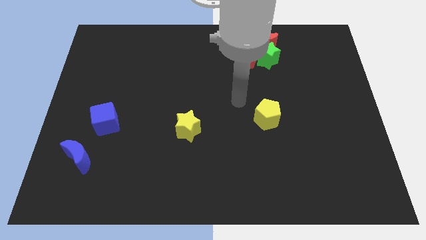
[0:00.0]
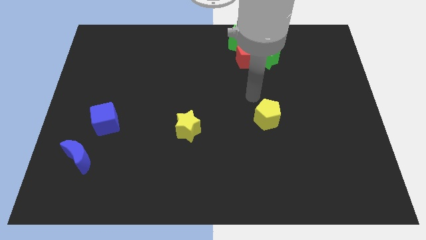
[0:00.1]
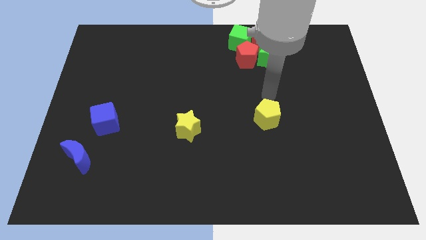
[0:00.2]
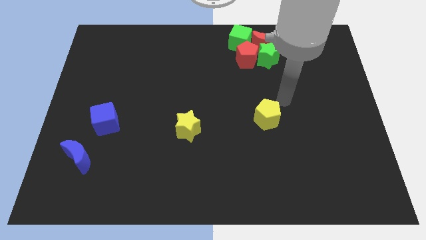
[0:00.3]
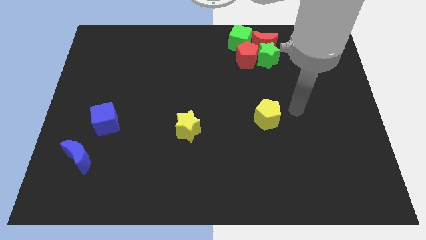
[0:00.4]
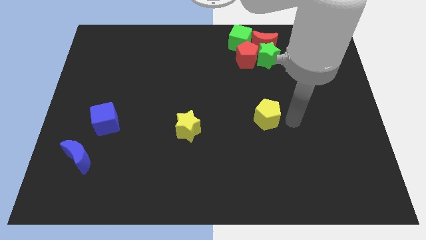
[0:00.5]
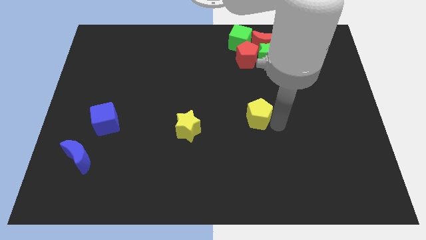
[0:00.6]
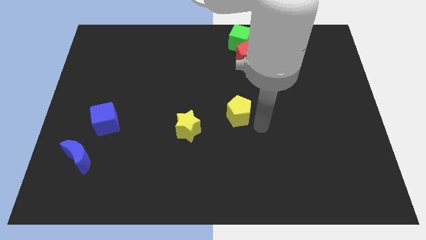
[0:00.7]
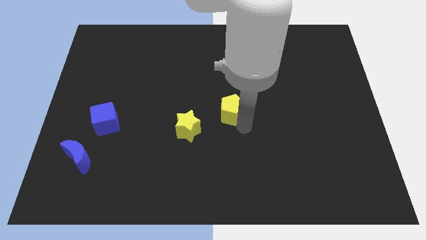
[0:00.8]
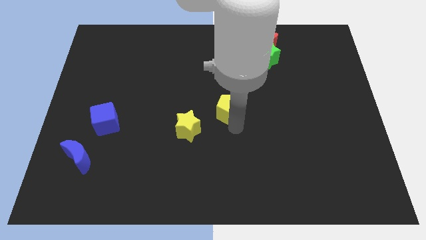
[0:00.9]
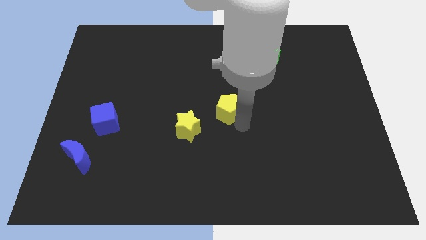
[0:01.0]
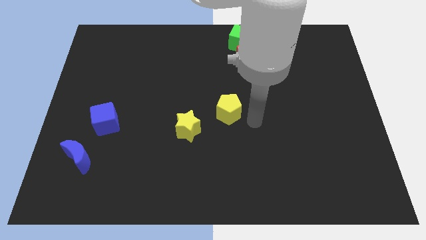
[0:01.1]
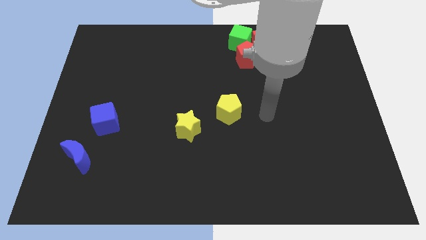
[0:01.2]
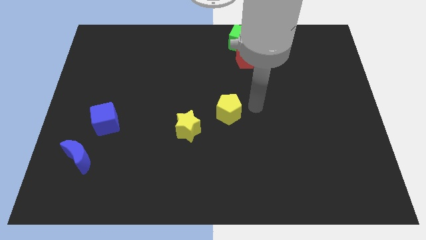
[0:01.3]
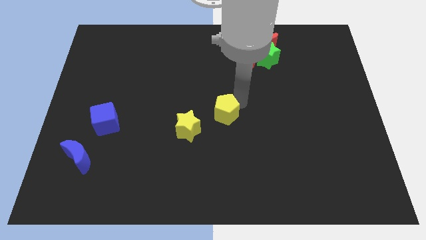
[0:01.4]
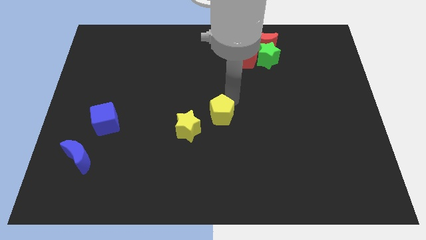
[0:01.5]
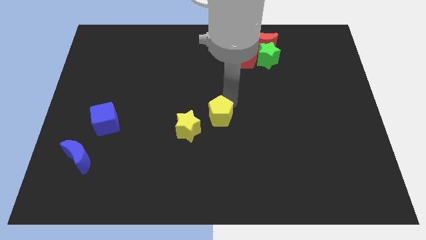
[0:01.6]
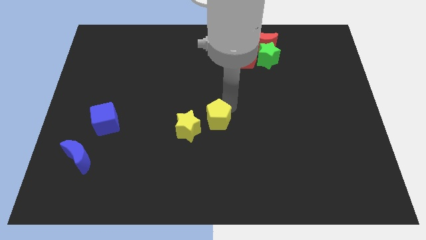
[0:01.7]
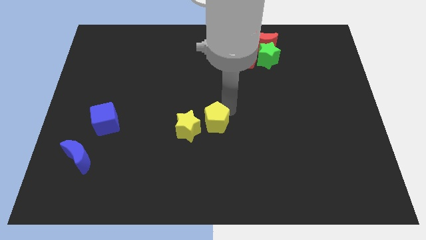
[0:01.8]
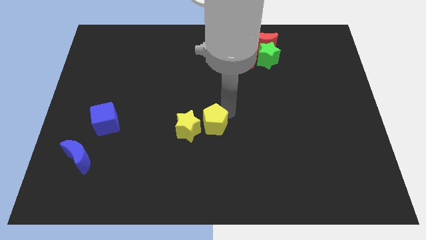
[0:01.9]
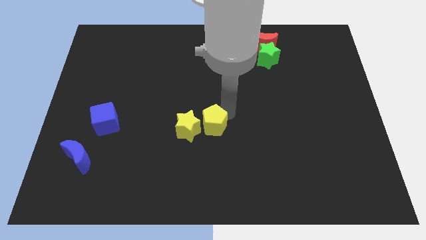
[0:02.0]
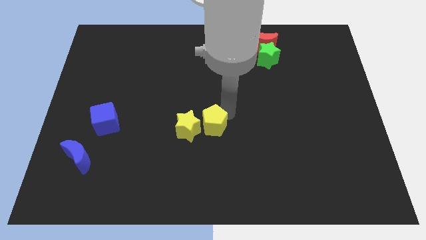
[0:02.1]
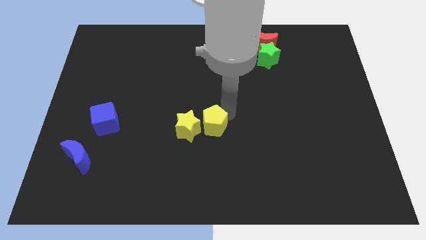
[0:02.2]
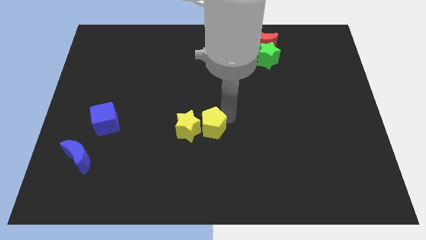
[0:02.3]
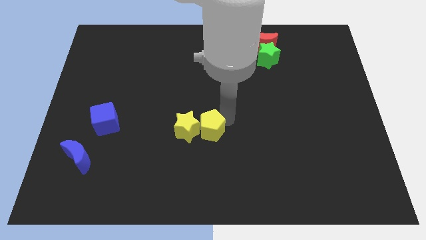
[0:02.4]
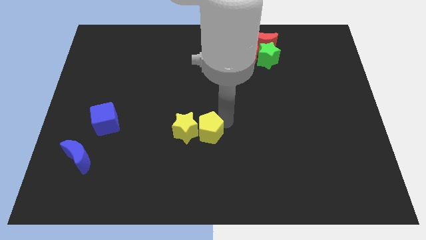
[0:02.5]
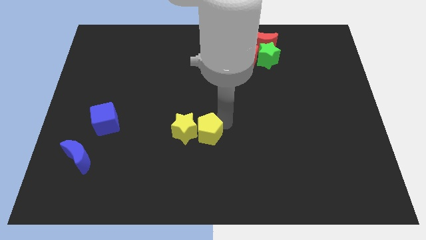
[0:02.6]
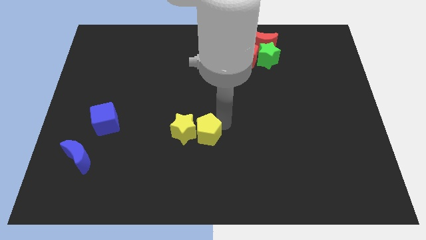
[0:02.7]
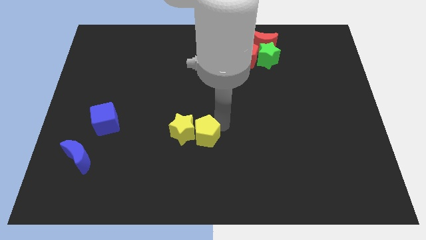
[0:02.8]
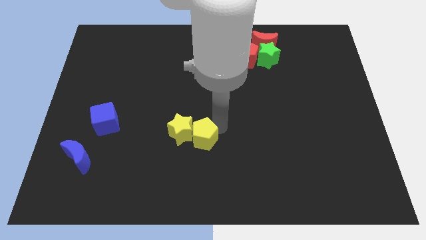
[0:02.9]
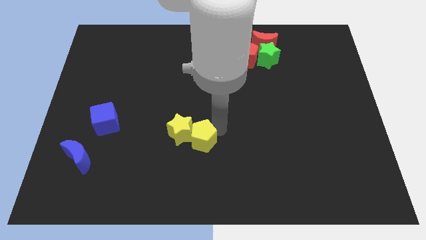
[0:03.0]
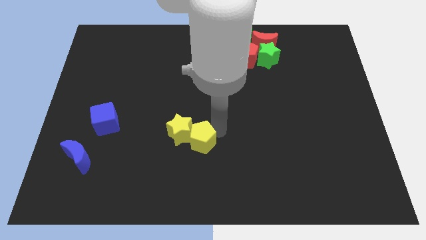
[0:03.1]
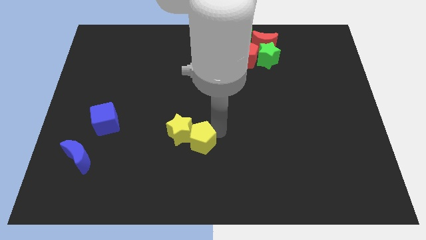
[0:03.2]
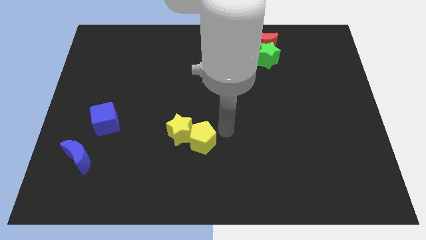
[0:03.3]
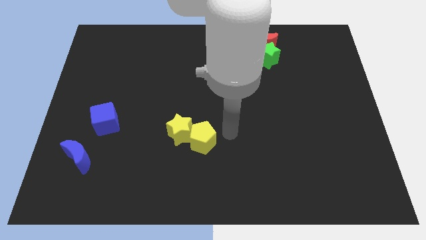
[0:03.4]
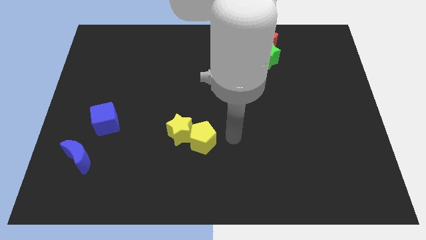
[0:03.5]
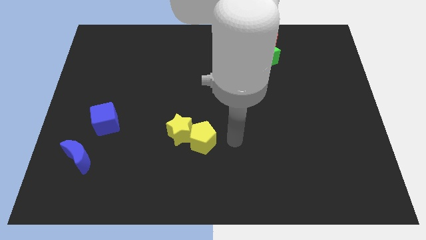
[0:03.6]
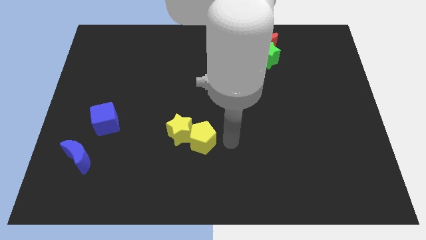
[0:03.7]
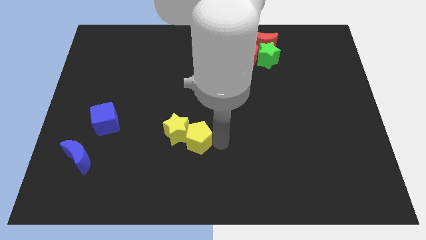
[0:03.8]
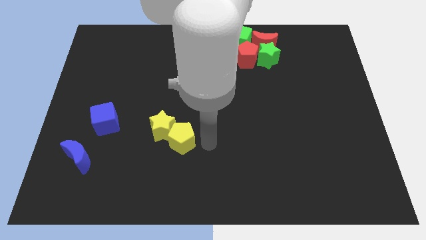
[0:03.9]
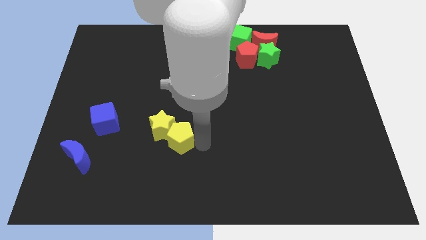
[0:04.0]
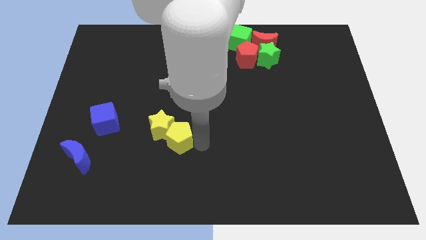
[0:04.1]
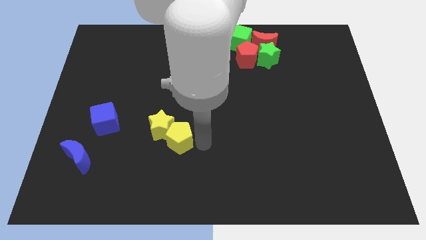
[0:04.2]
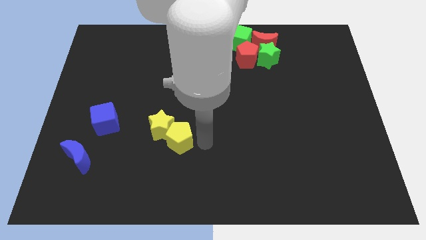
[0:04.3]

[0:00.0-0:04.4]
push the yellow pentagon along with the yellow star towards the left side

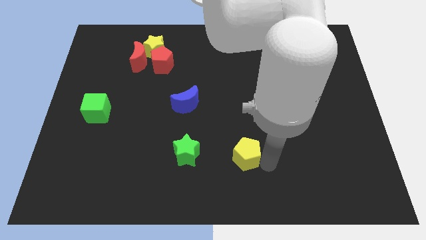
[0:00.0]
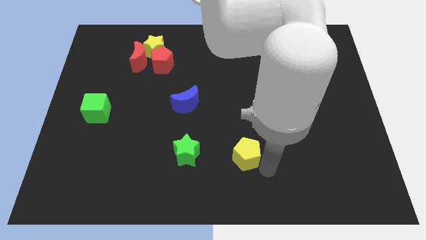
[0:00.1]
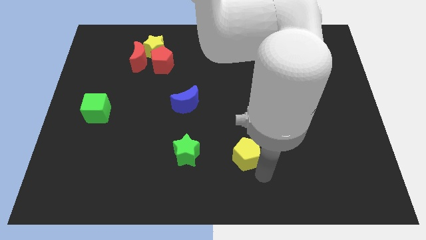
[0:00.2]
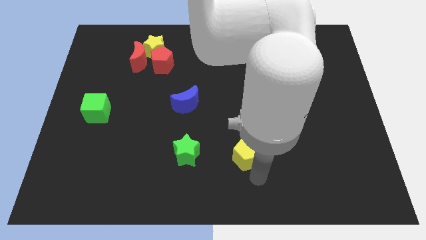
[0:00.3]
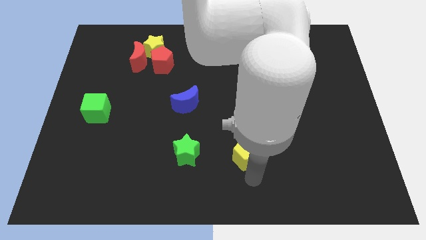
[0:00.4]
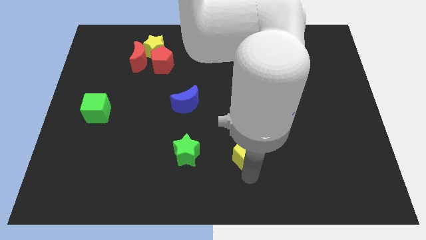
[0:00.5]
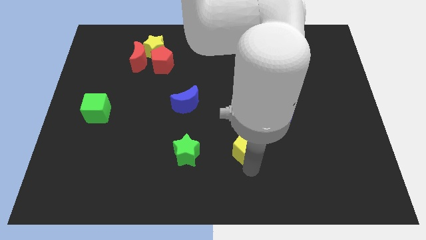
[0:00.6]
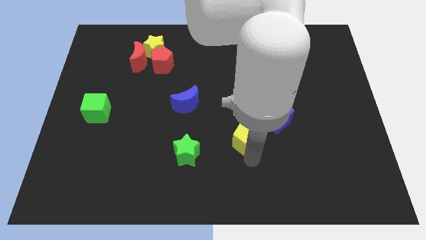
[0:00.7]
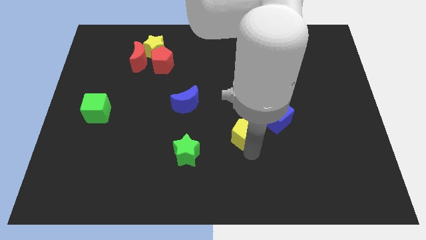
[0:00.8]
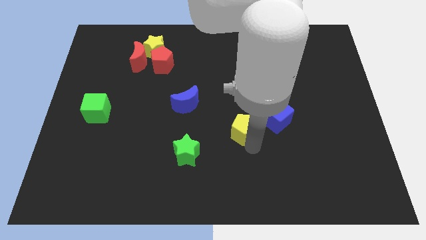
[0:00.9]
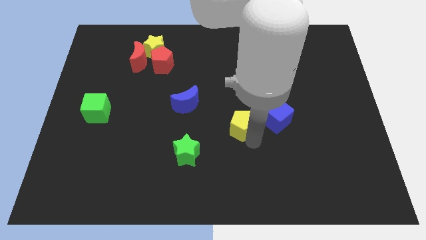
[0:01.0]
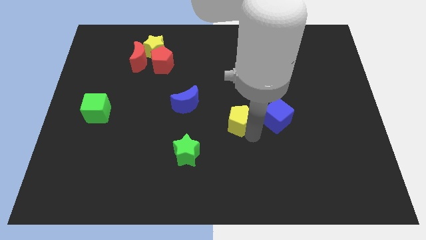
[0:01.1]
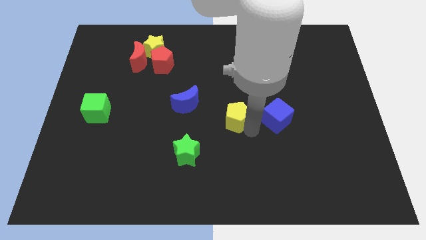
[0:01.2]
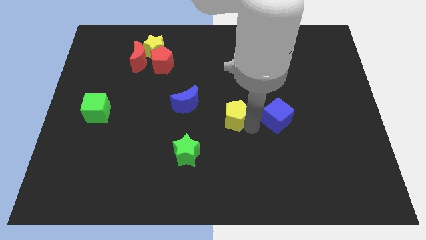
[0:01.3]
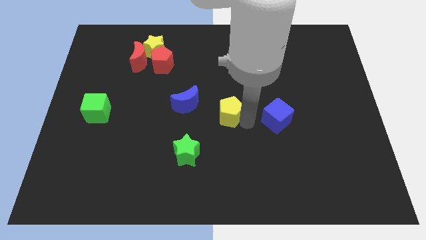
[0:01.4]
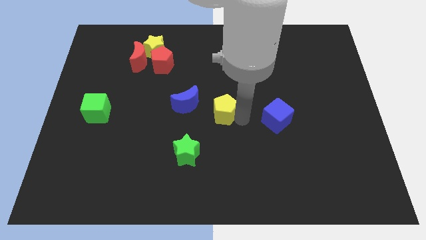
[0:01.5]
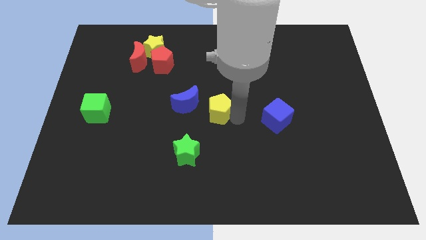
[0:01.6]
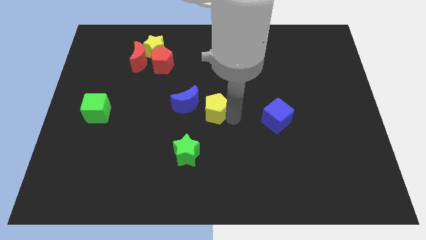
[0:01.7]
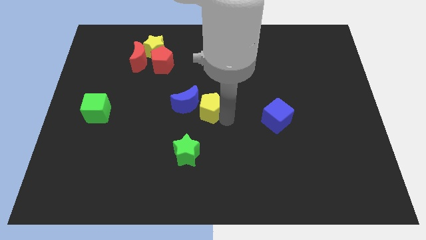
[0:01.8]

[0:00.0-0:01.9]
push the yellow pentagon to the center of the board

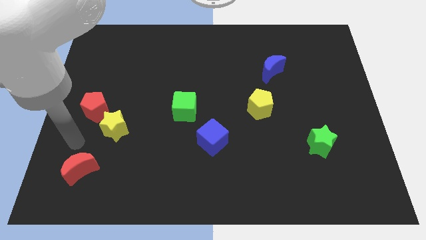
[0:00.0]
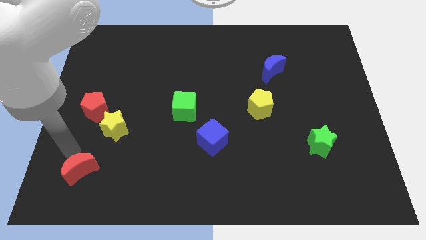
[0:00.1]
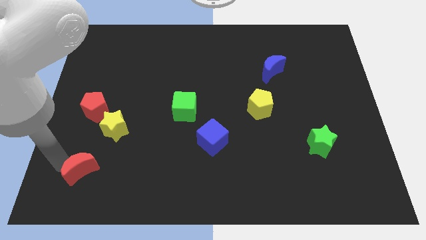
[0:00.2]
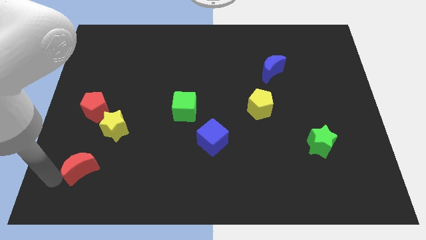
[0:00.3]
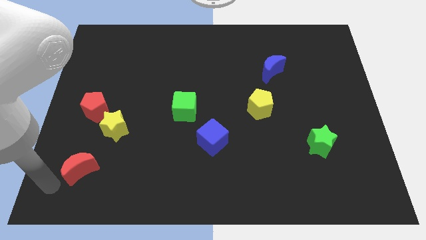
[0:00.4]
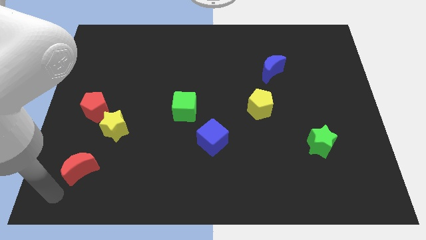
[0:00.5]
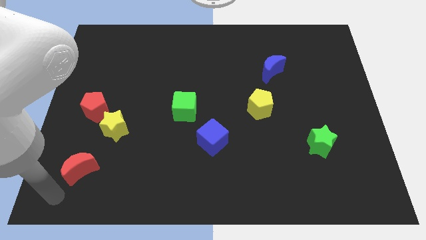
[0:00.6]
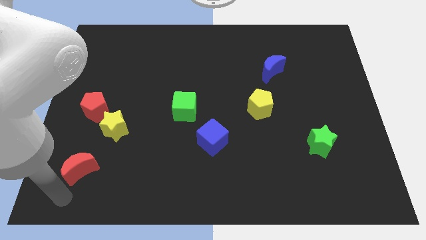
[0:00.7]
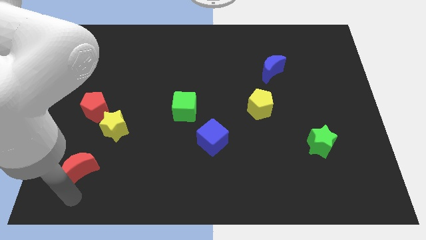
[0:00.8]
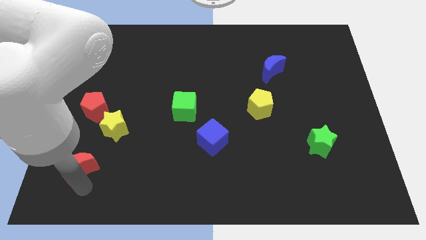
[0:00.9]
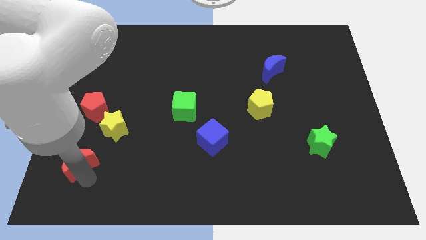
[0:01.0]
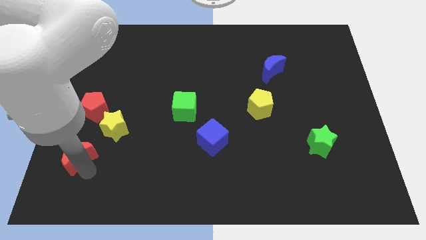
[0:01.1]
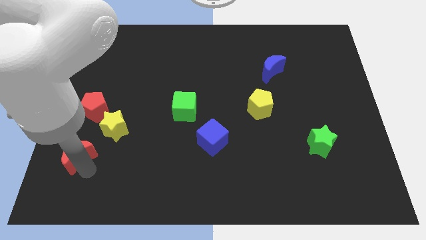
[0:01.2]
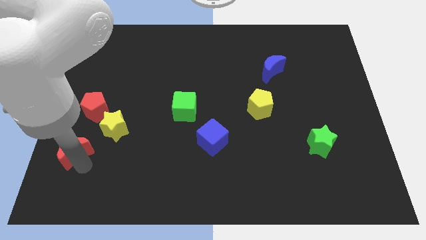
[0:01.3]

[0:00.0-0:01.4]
push the red crescent to the bottom left of the yellow star

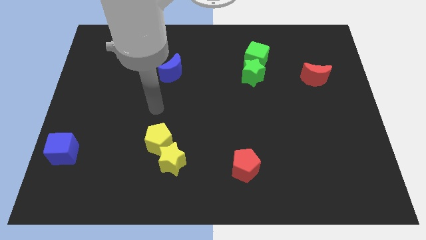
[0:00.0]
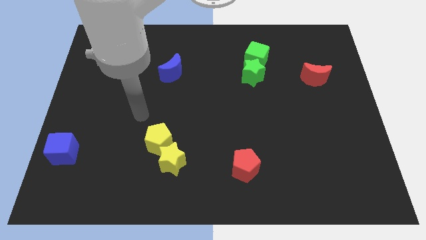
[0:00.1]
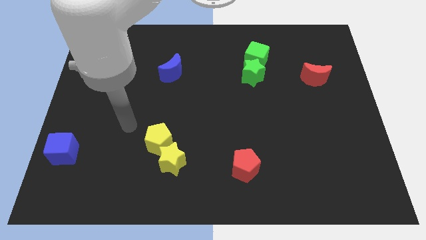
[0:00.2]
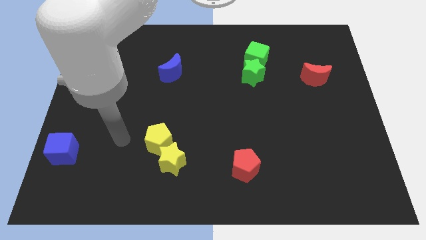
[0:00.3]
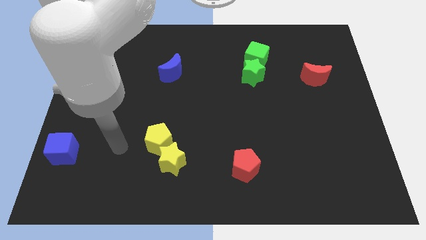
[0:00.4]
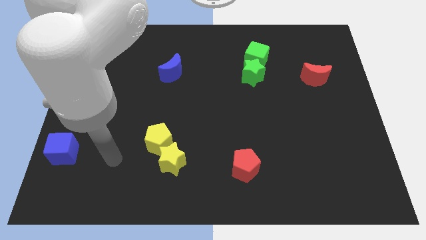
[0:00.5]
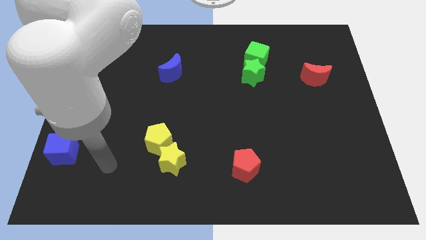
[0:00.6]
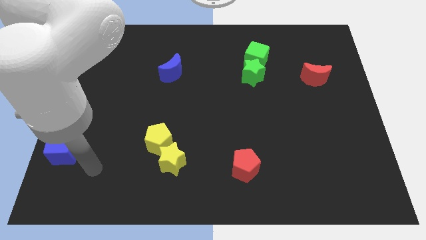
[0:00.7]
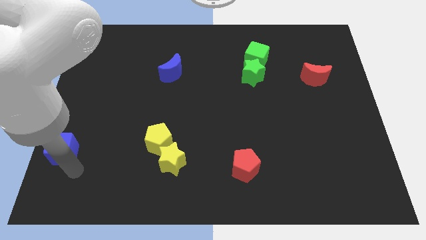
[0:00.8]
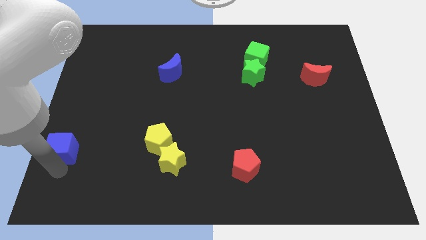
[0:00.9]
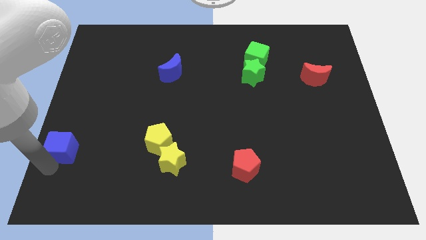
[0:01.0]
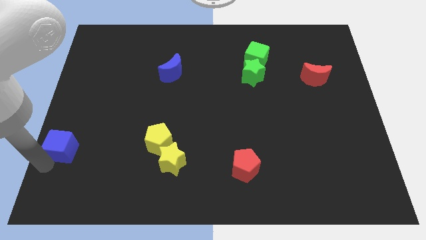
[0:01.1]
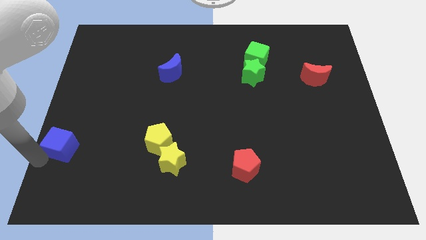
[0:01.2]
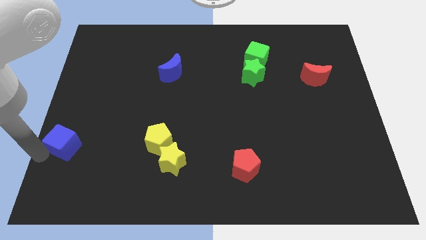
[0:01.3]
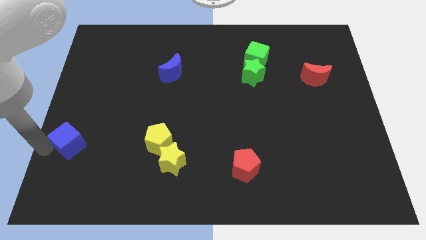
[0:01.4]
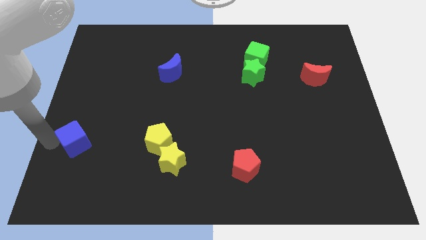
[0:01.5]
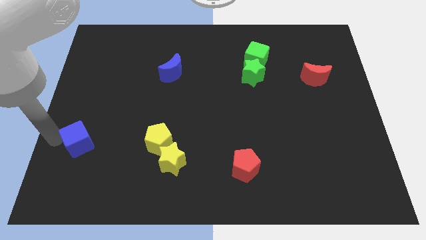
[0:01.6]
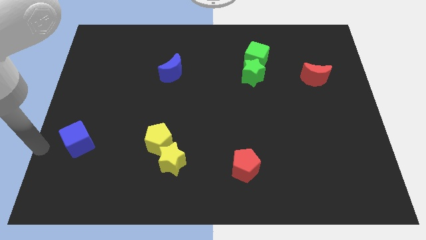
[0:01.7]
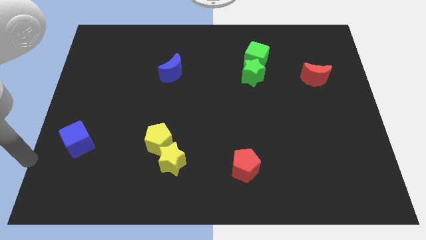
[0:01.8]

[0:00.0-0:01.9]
move the blue cube slightly towards the yellow pentagon
